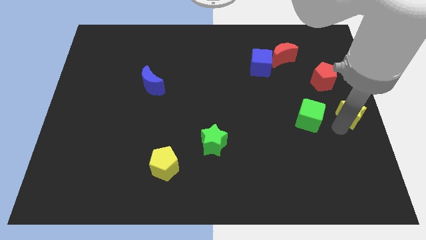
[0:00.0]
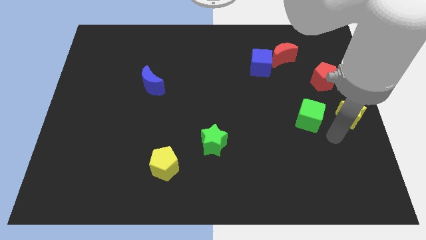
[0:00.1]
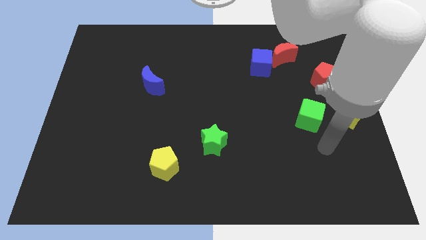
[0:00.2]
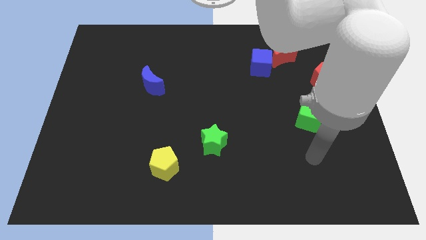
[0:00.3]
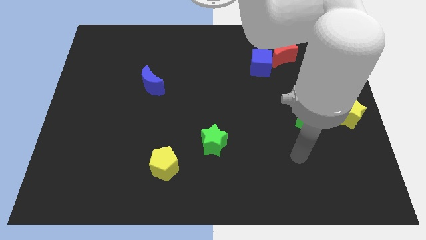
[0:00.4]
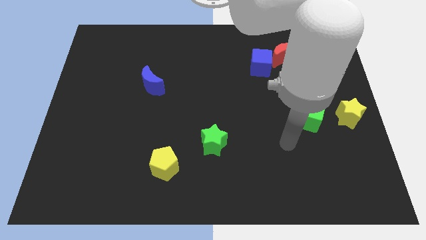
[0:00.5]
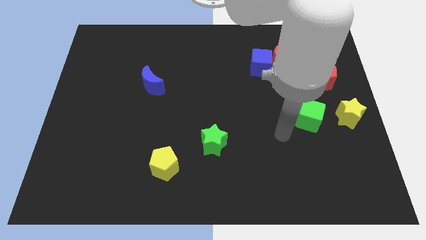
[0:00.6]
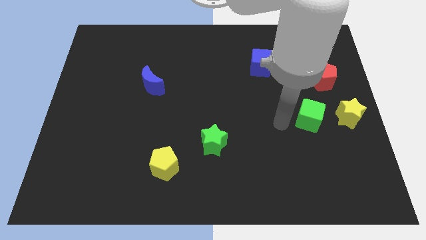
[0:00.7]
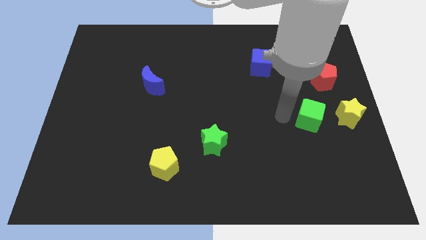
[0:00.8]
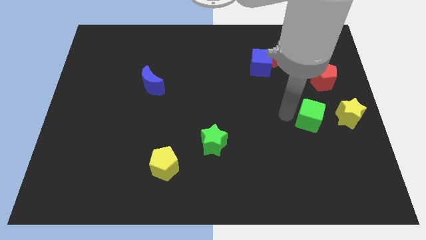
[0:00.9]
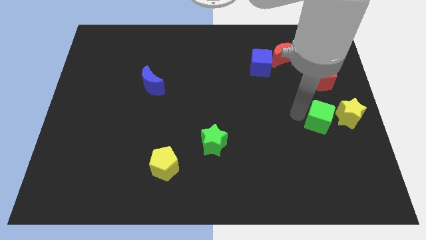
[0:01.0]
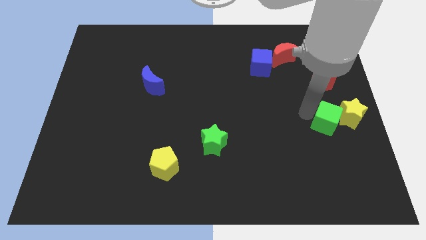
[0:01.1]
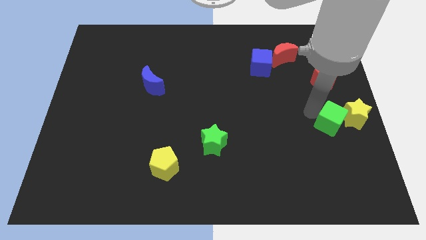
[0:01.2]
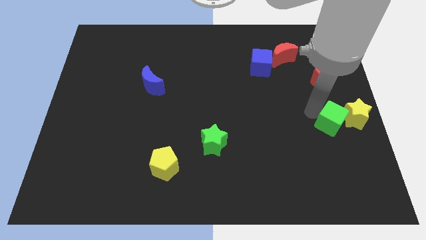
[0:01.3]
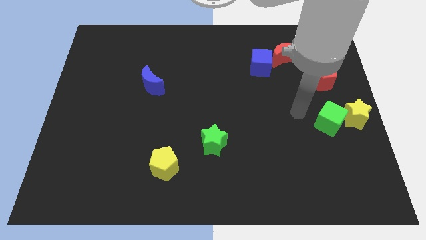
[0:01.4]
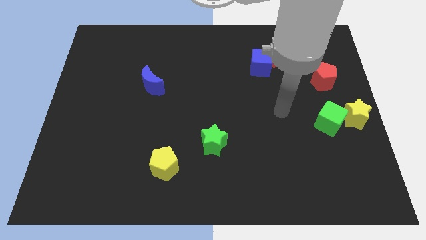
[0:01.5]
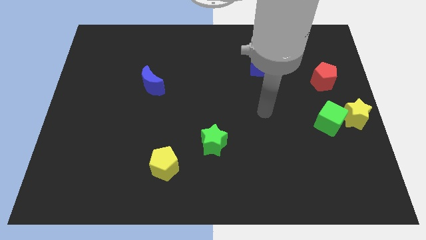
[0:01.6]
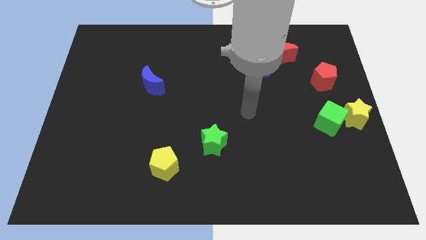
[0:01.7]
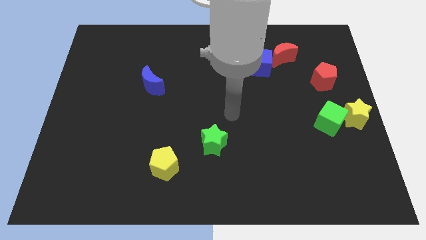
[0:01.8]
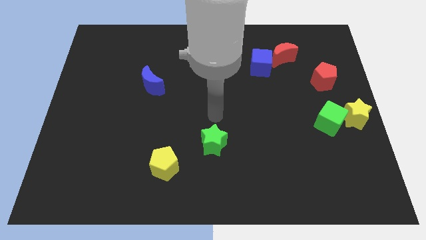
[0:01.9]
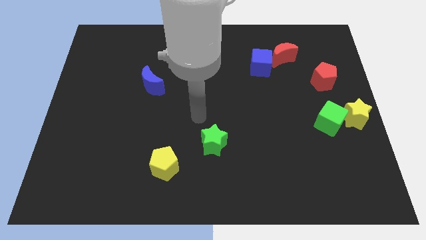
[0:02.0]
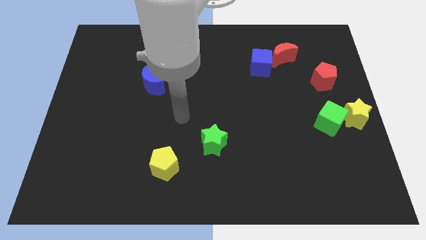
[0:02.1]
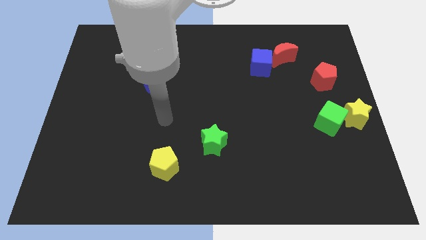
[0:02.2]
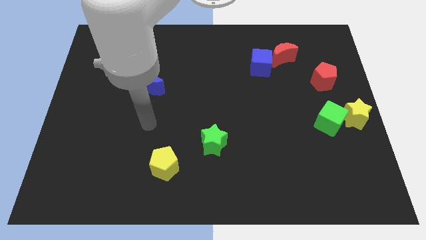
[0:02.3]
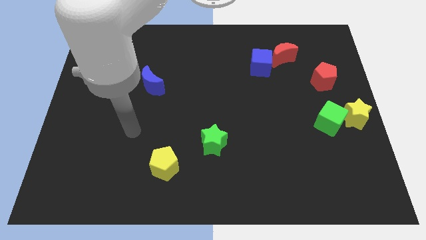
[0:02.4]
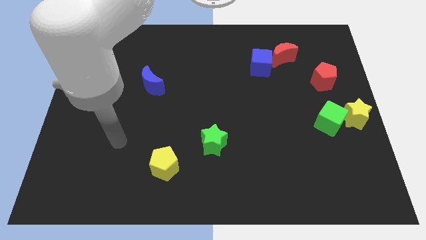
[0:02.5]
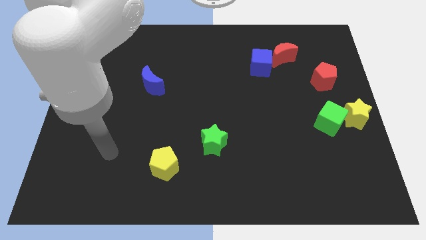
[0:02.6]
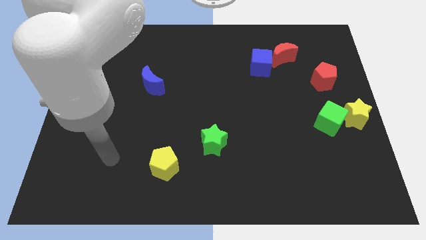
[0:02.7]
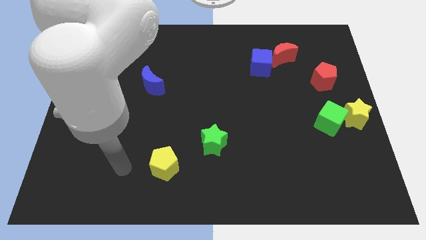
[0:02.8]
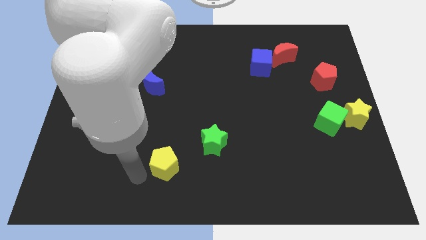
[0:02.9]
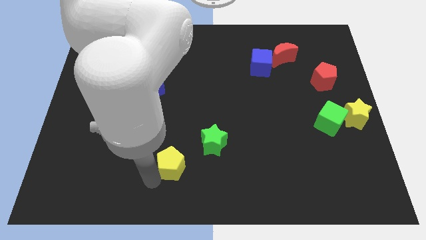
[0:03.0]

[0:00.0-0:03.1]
push the green cube to the left of the yellow star

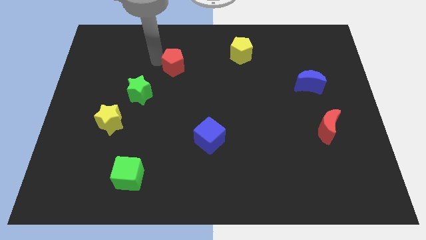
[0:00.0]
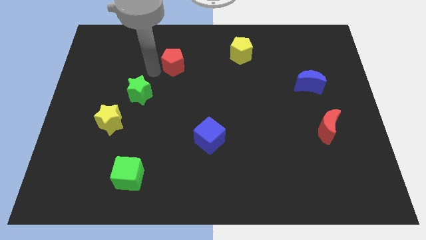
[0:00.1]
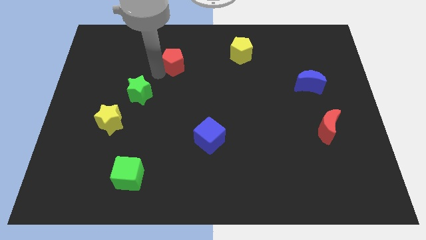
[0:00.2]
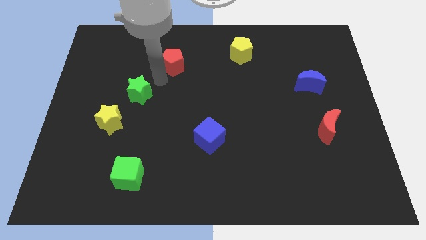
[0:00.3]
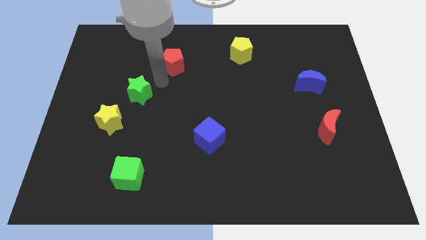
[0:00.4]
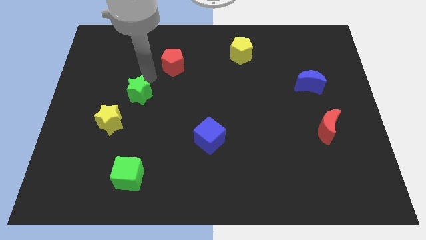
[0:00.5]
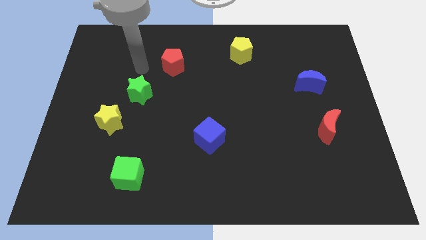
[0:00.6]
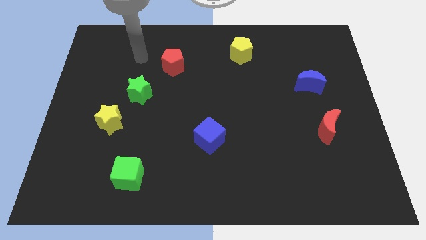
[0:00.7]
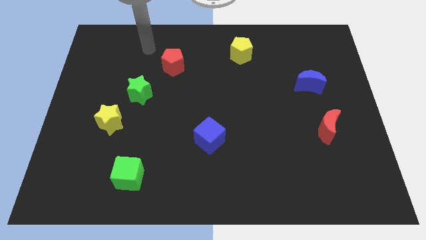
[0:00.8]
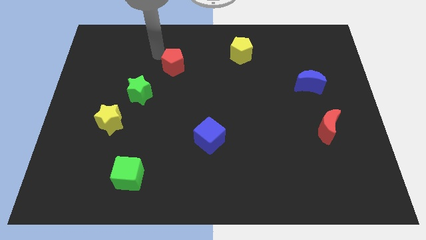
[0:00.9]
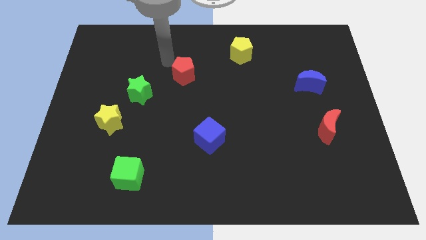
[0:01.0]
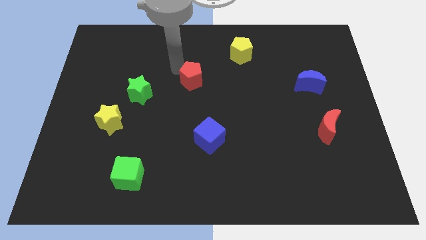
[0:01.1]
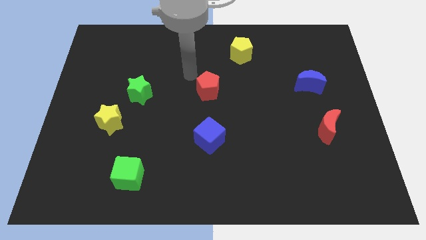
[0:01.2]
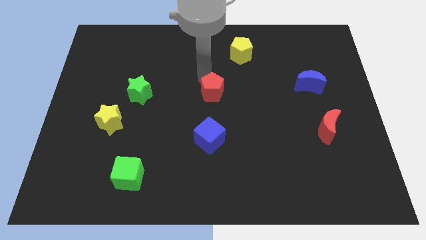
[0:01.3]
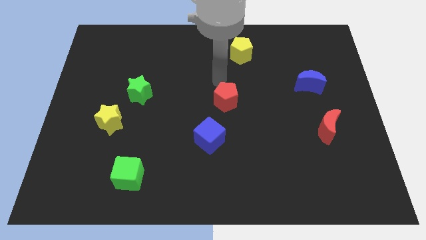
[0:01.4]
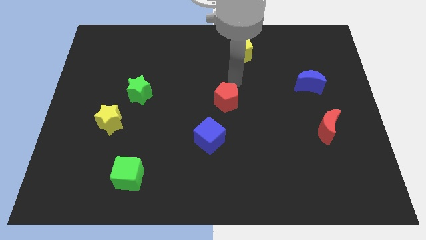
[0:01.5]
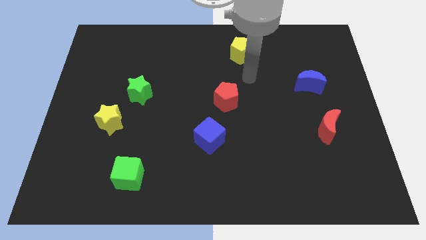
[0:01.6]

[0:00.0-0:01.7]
move the red pentagon to the center of the board

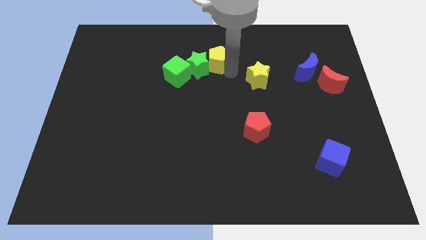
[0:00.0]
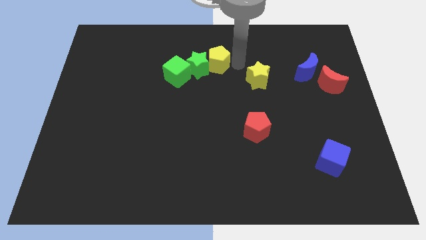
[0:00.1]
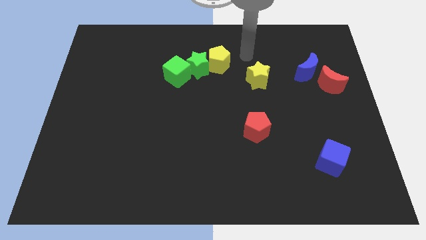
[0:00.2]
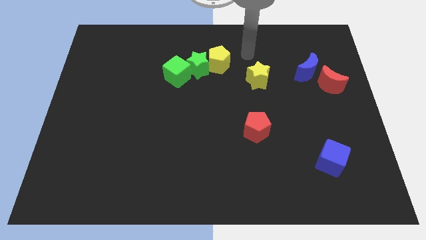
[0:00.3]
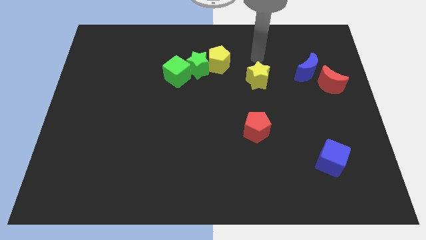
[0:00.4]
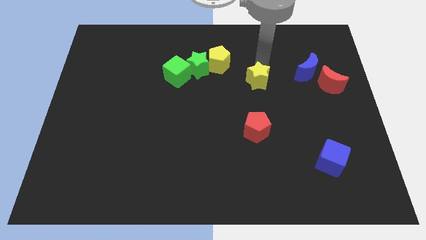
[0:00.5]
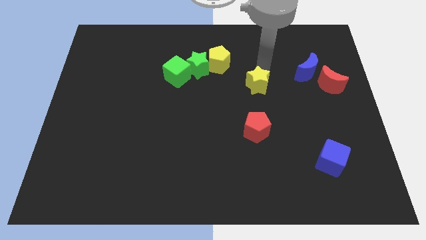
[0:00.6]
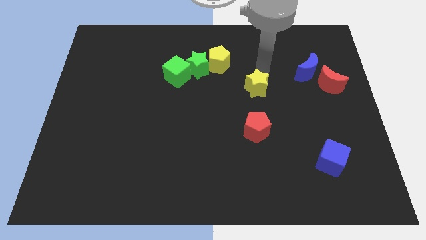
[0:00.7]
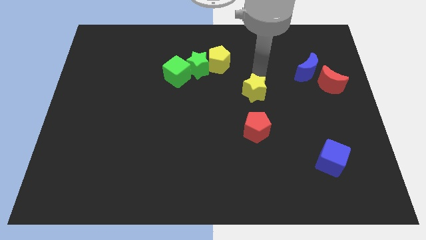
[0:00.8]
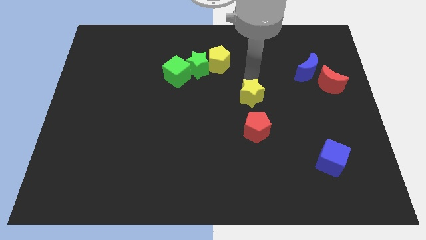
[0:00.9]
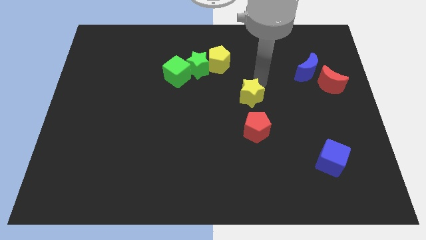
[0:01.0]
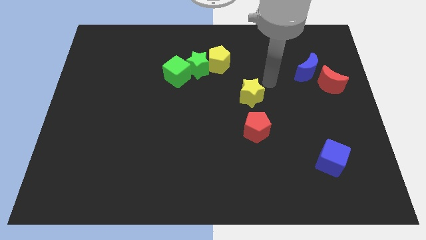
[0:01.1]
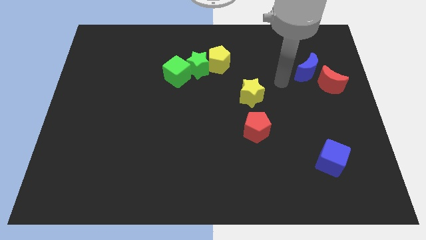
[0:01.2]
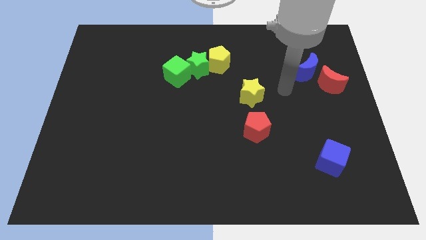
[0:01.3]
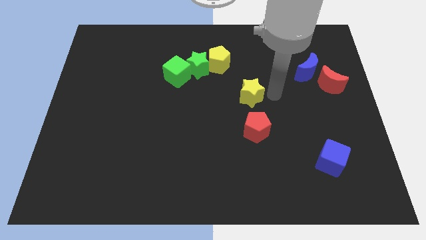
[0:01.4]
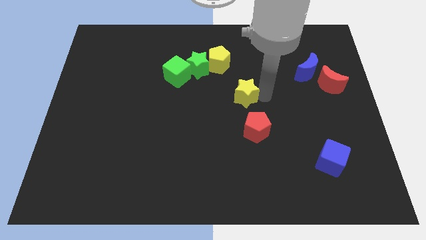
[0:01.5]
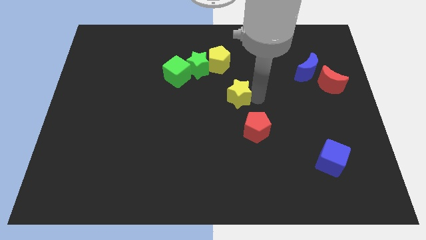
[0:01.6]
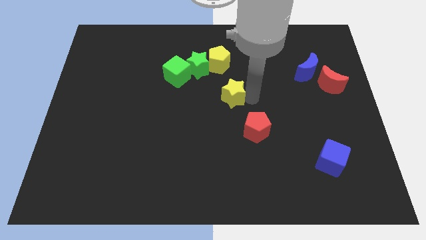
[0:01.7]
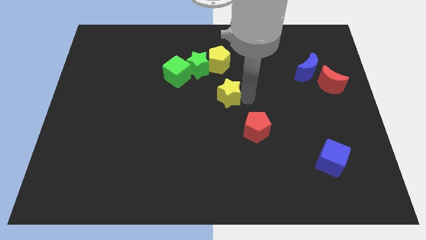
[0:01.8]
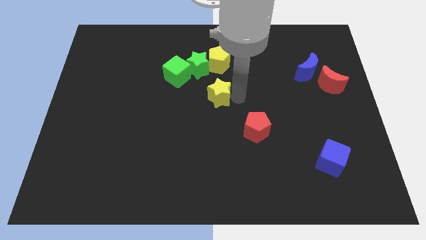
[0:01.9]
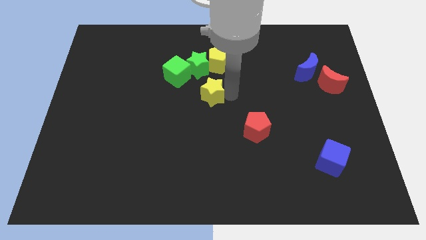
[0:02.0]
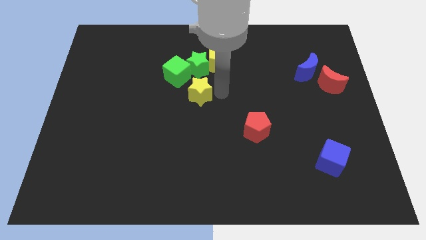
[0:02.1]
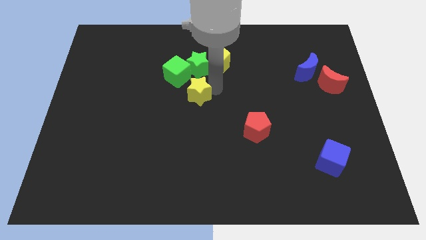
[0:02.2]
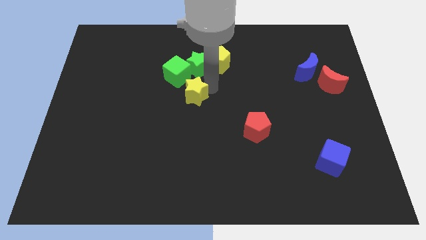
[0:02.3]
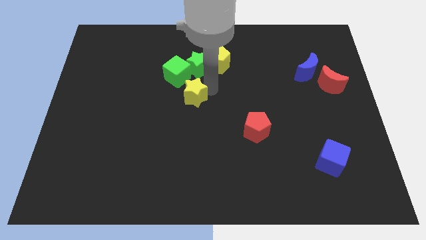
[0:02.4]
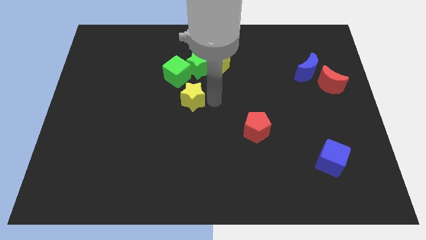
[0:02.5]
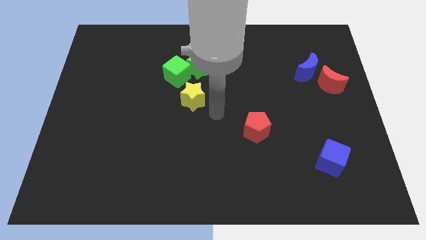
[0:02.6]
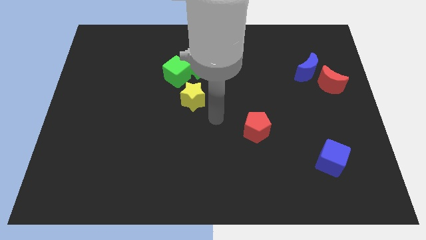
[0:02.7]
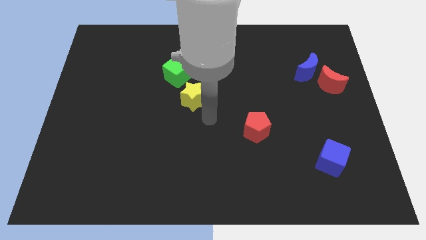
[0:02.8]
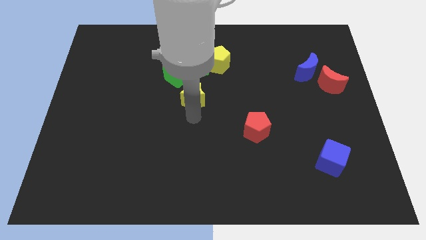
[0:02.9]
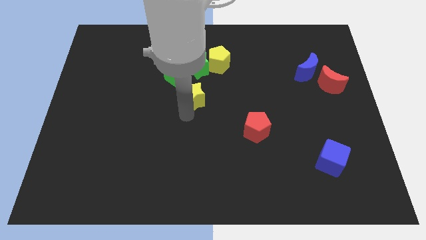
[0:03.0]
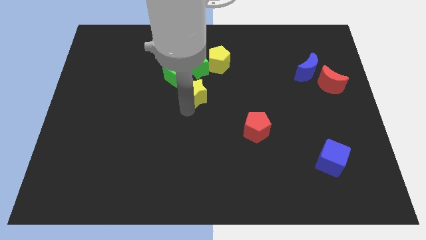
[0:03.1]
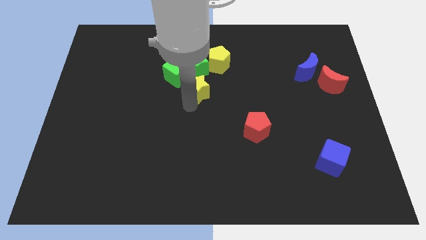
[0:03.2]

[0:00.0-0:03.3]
push the yellow star to the bottom of the green star

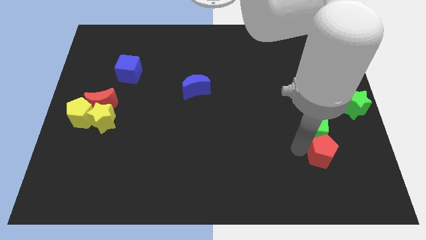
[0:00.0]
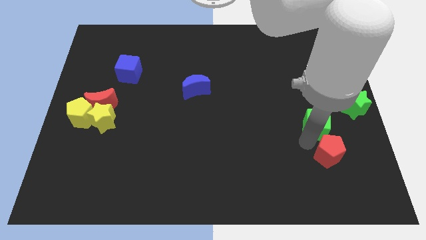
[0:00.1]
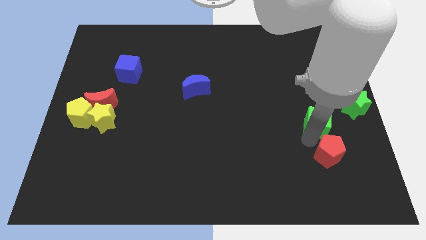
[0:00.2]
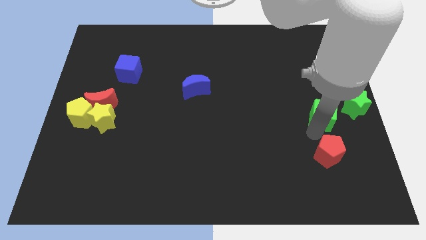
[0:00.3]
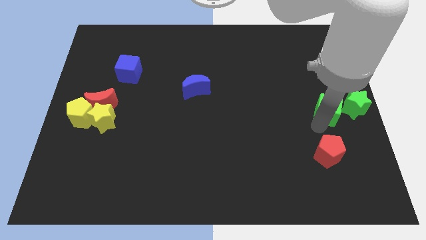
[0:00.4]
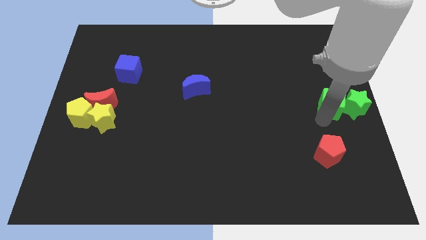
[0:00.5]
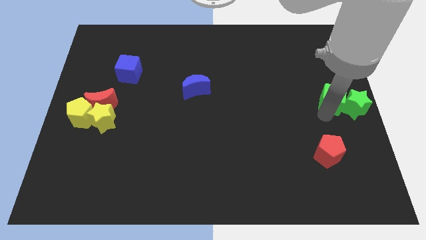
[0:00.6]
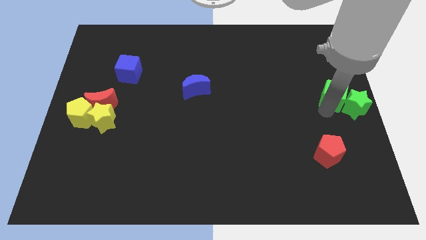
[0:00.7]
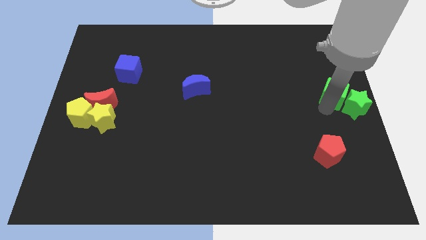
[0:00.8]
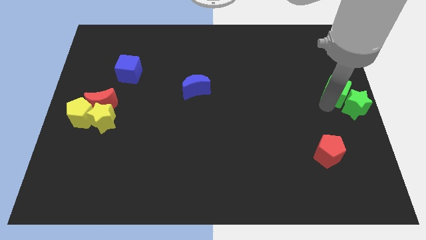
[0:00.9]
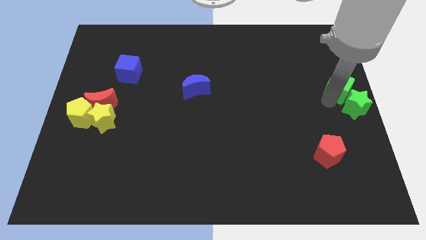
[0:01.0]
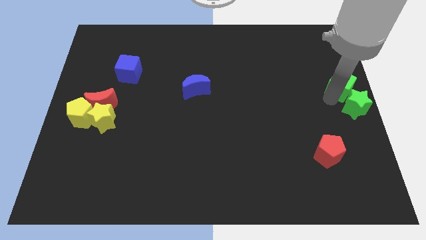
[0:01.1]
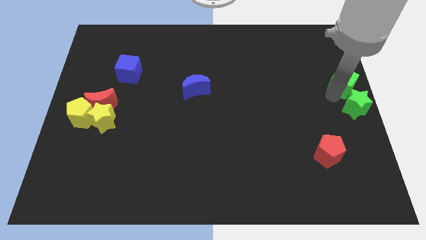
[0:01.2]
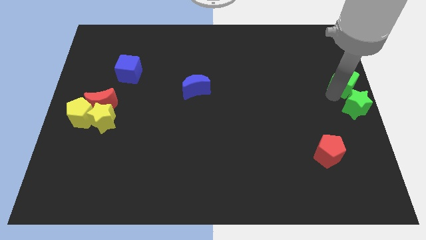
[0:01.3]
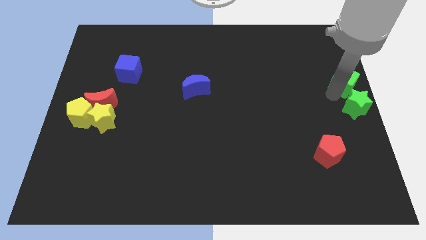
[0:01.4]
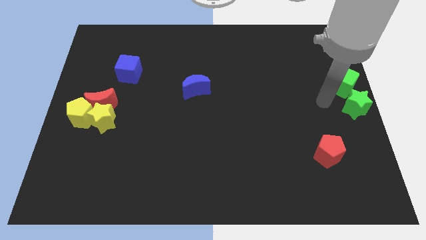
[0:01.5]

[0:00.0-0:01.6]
separate the green cube and red pentagon
